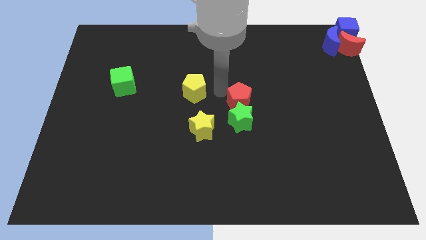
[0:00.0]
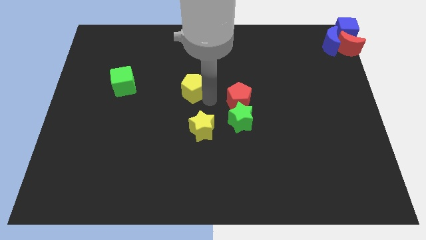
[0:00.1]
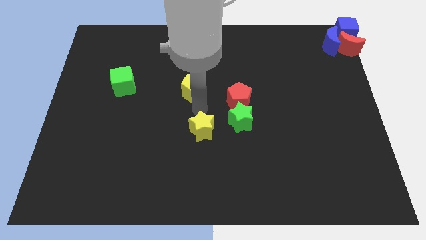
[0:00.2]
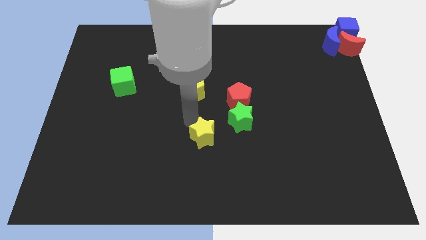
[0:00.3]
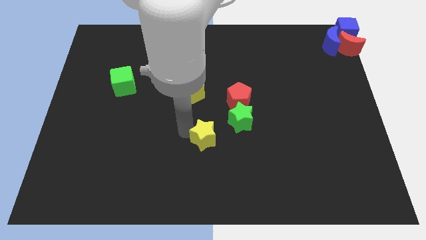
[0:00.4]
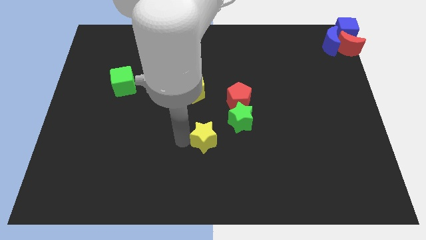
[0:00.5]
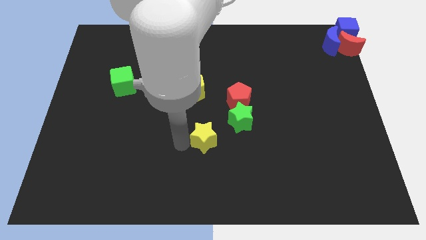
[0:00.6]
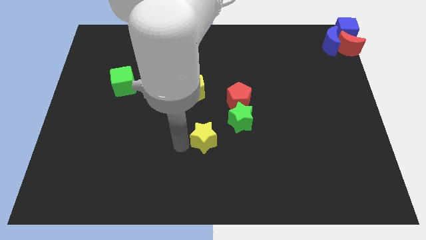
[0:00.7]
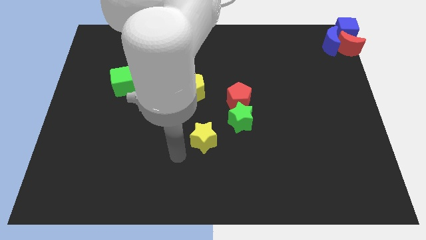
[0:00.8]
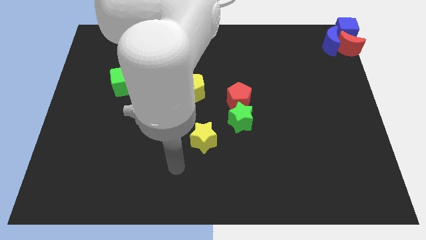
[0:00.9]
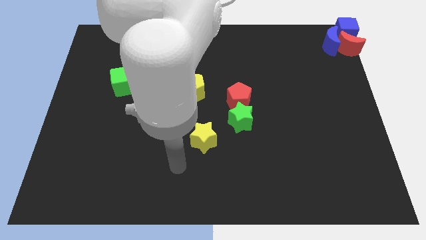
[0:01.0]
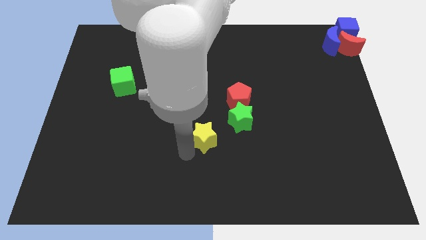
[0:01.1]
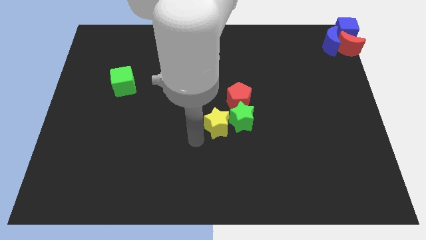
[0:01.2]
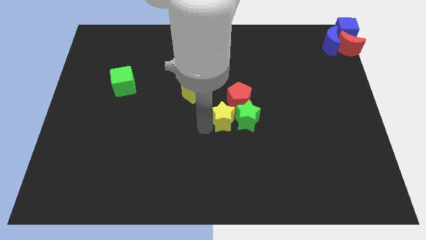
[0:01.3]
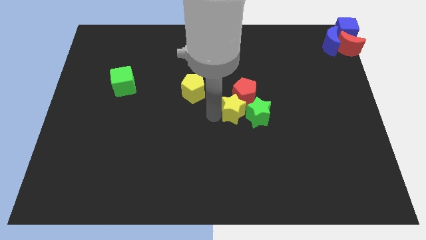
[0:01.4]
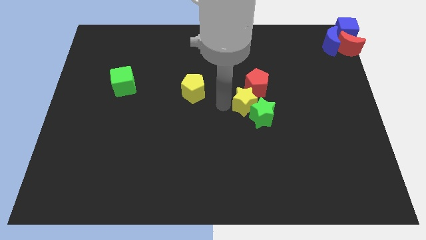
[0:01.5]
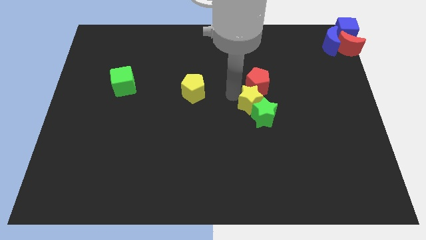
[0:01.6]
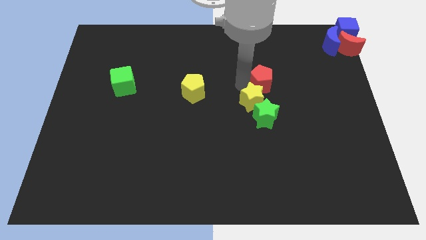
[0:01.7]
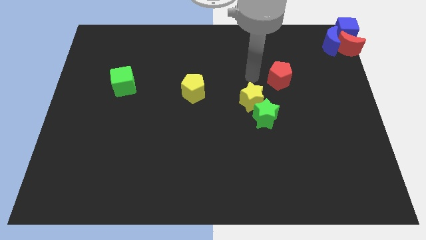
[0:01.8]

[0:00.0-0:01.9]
push the red pentagon and green star using yellow star slightly to the right

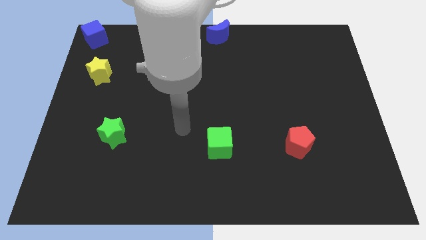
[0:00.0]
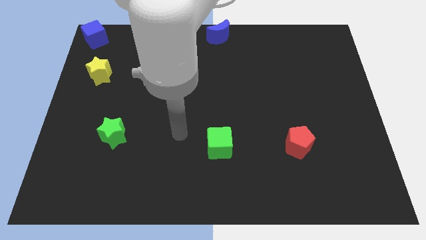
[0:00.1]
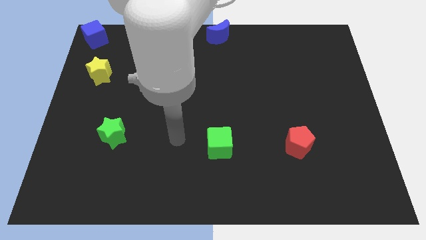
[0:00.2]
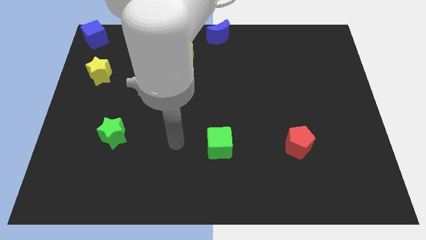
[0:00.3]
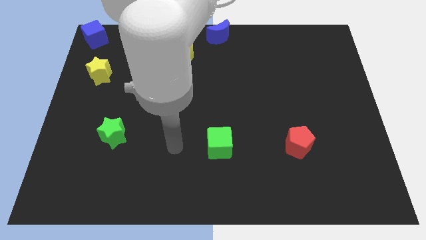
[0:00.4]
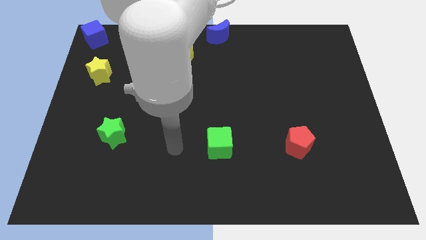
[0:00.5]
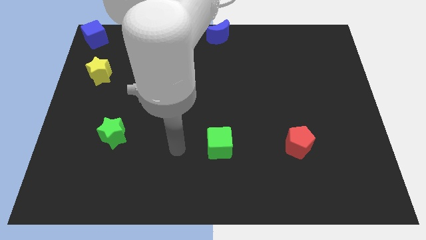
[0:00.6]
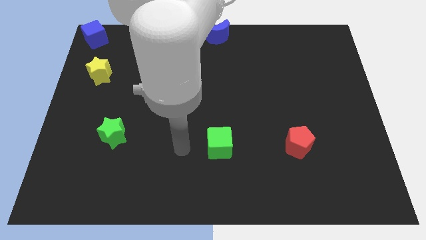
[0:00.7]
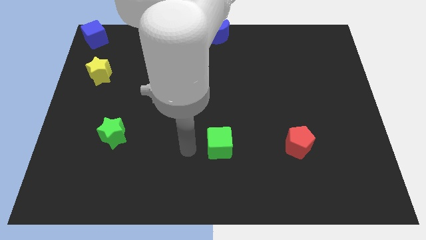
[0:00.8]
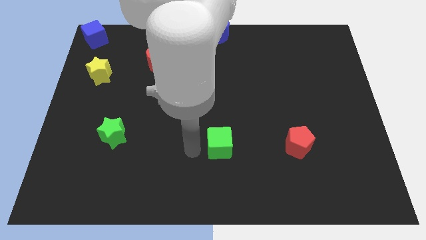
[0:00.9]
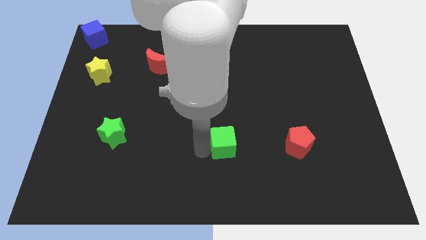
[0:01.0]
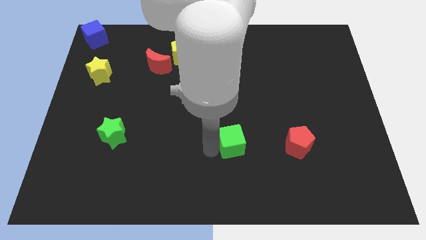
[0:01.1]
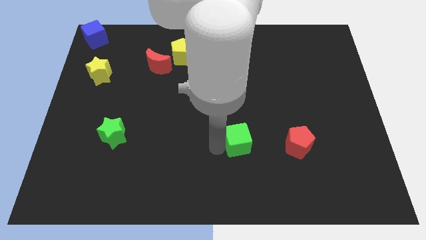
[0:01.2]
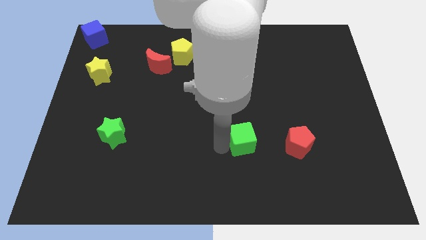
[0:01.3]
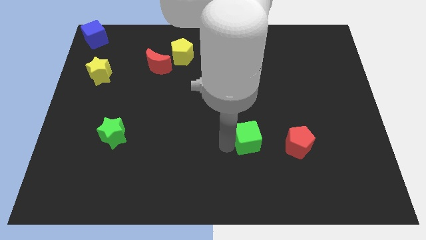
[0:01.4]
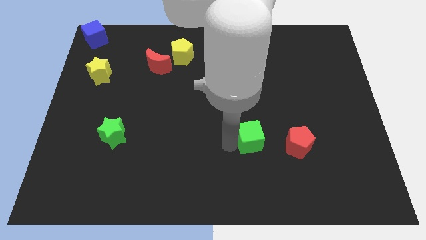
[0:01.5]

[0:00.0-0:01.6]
push the green cube slightly to the right of the board

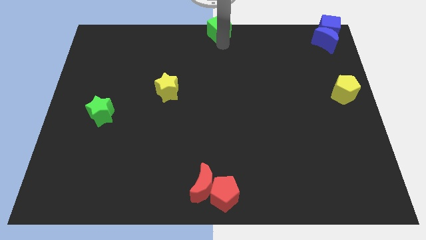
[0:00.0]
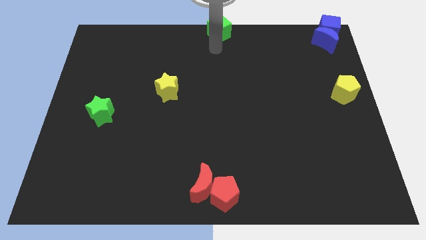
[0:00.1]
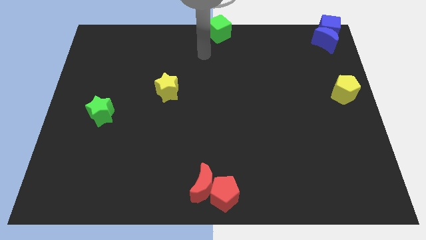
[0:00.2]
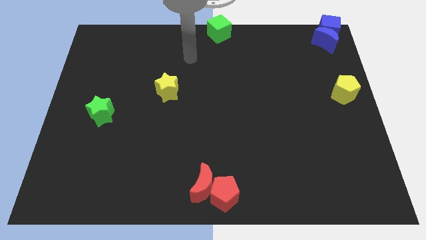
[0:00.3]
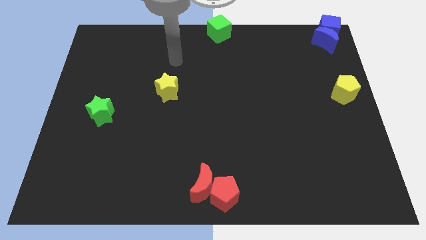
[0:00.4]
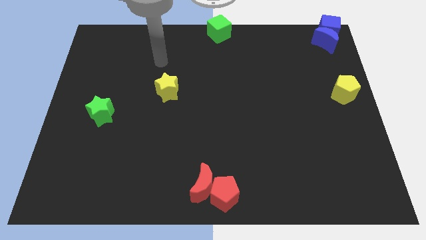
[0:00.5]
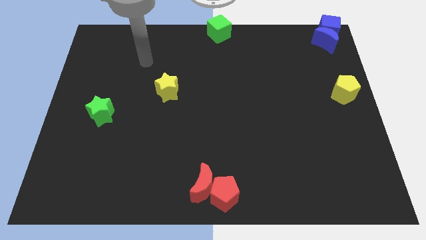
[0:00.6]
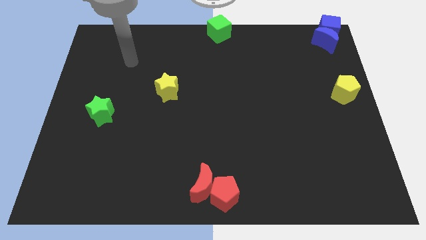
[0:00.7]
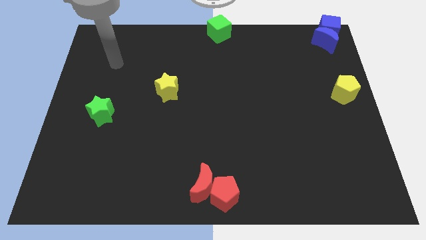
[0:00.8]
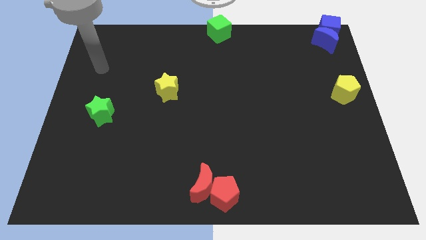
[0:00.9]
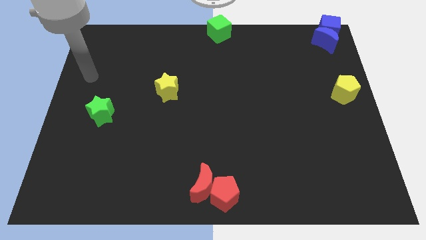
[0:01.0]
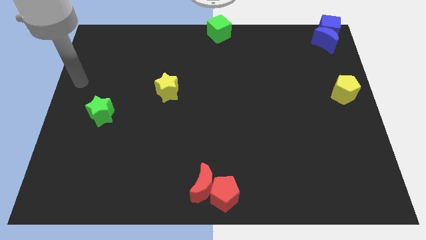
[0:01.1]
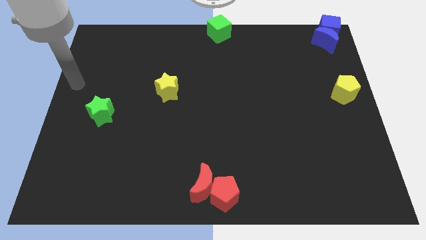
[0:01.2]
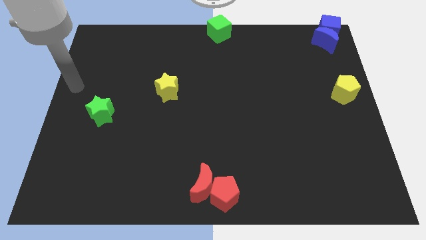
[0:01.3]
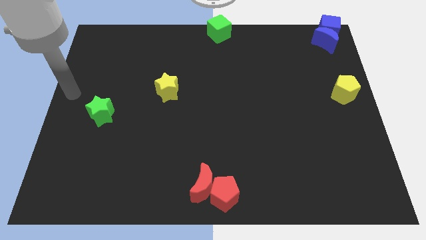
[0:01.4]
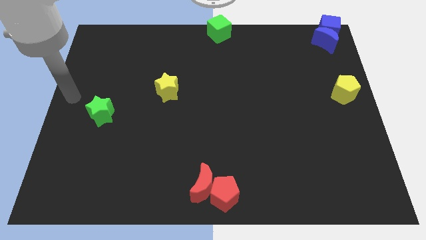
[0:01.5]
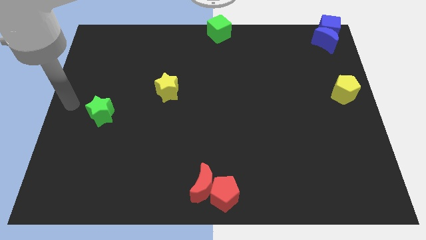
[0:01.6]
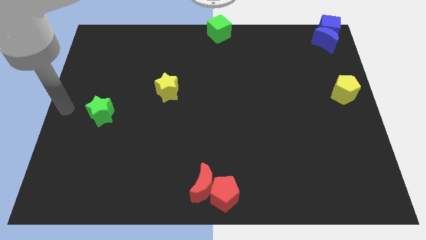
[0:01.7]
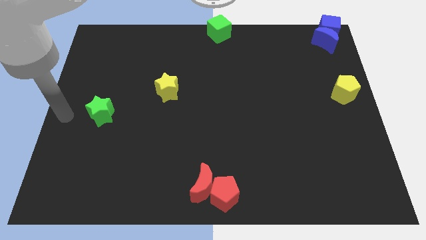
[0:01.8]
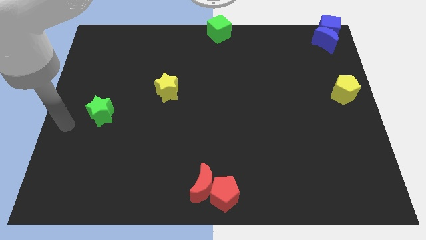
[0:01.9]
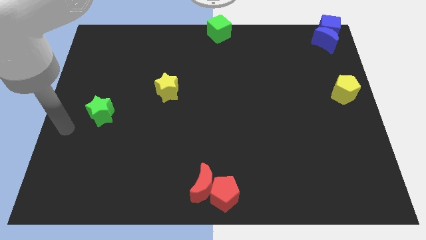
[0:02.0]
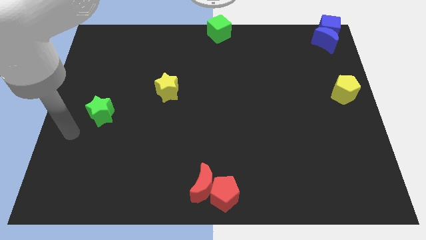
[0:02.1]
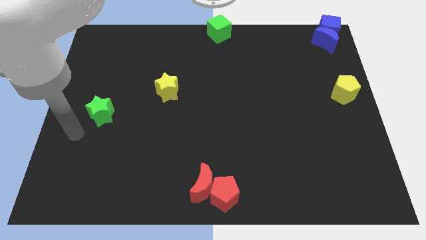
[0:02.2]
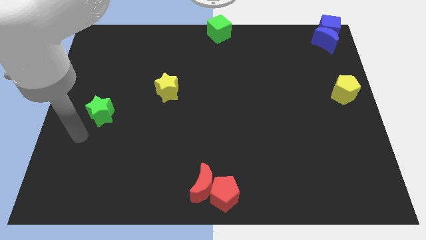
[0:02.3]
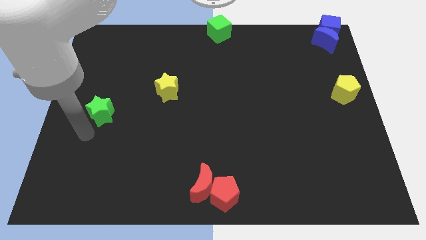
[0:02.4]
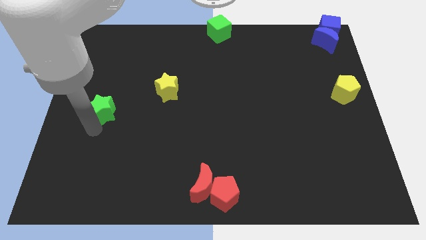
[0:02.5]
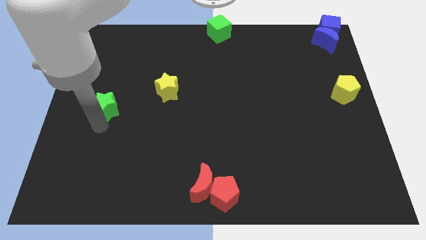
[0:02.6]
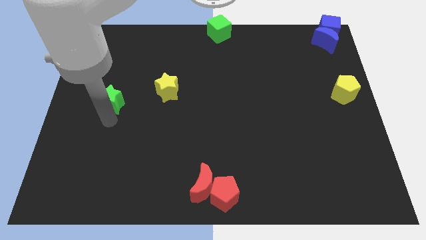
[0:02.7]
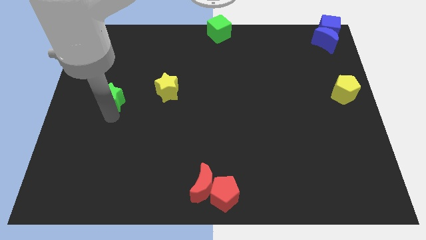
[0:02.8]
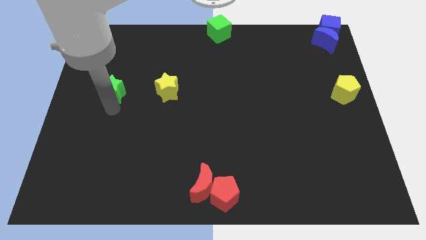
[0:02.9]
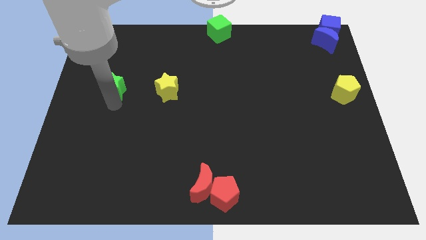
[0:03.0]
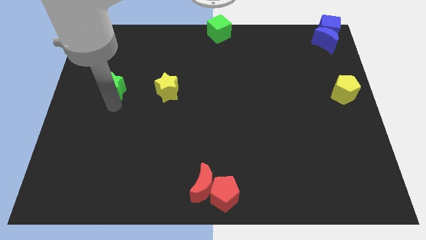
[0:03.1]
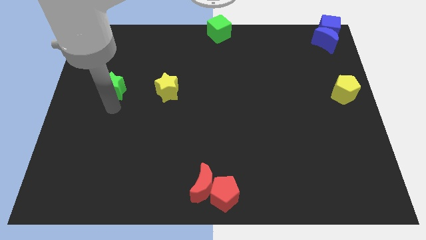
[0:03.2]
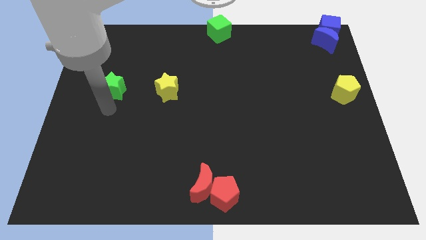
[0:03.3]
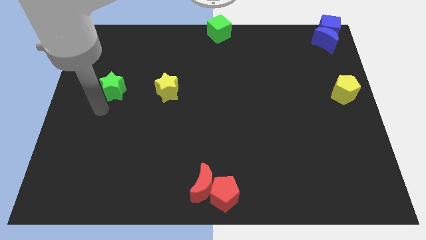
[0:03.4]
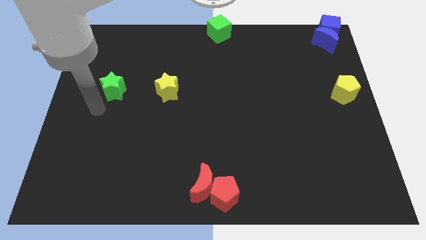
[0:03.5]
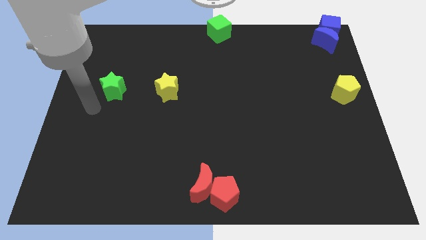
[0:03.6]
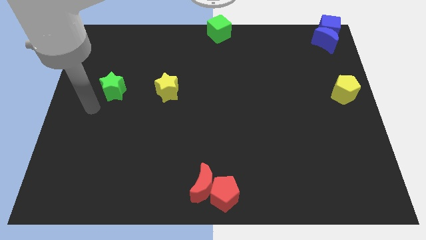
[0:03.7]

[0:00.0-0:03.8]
place the green star to the left side of yellow star

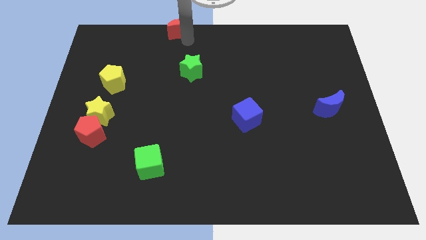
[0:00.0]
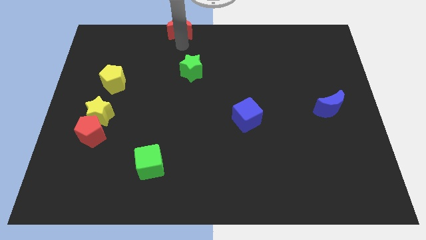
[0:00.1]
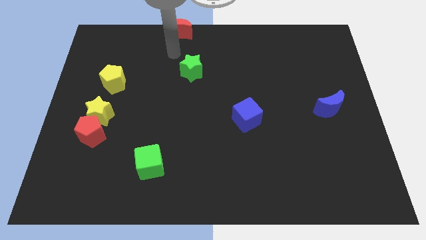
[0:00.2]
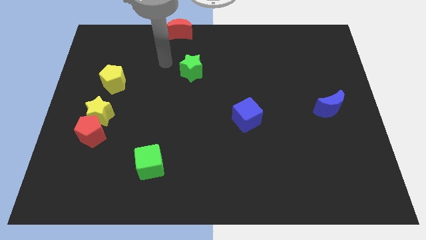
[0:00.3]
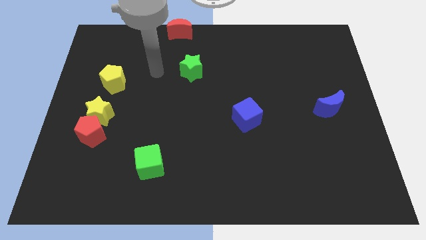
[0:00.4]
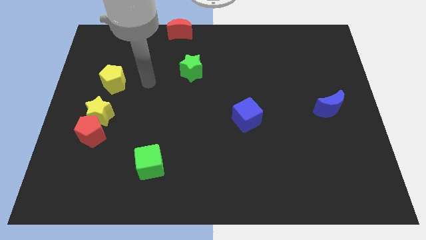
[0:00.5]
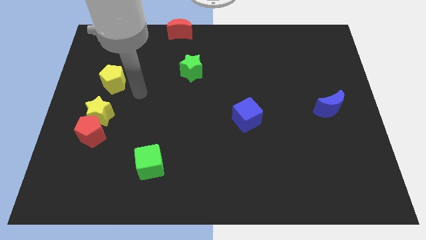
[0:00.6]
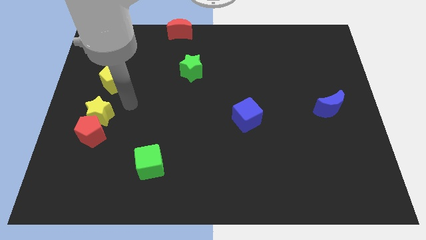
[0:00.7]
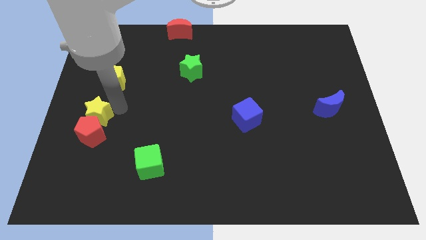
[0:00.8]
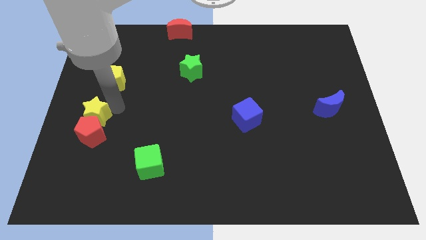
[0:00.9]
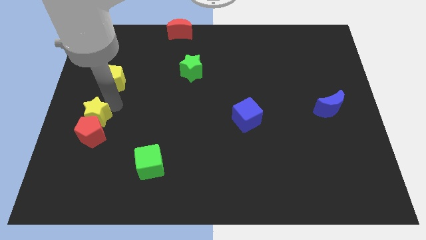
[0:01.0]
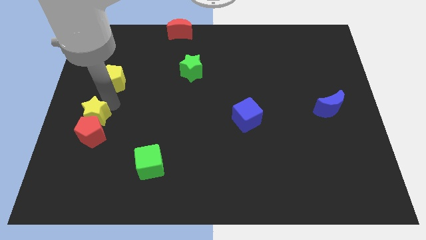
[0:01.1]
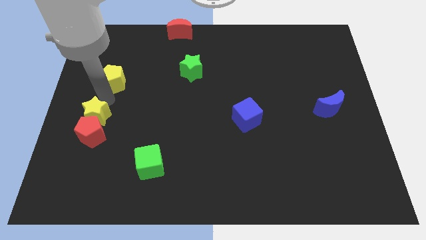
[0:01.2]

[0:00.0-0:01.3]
move your arm away from the red moon

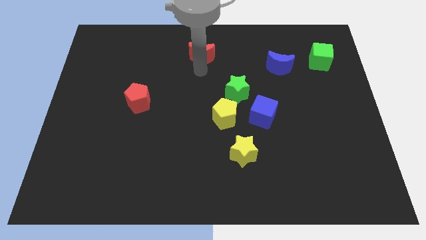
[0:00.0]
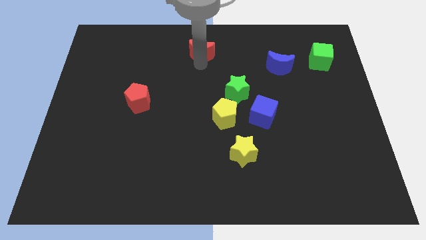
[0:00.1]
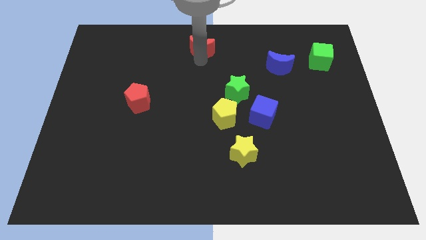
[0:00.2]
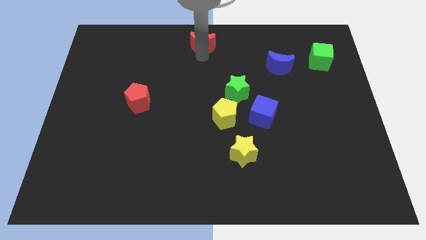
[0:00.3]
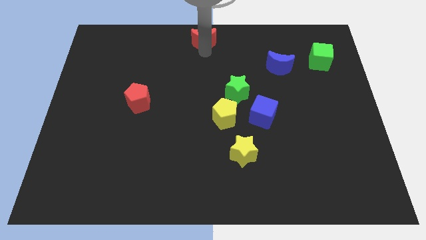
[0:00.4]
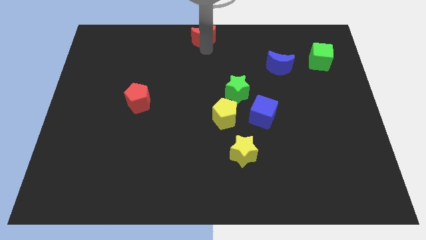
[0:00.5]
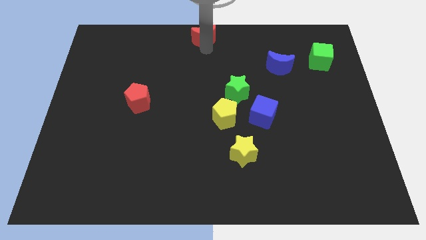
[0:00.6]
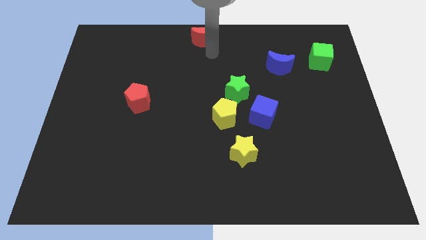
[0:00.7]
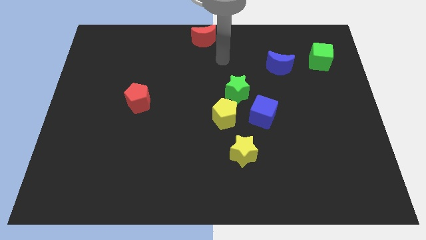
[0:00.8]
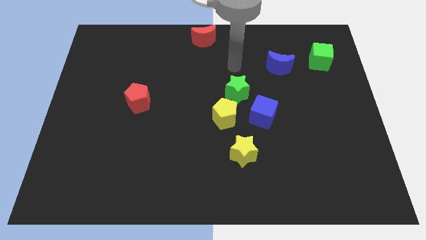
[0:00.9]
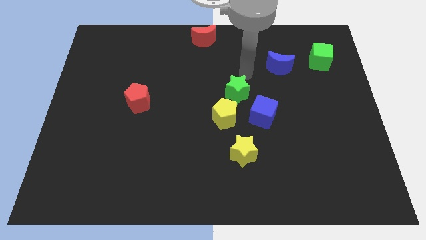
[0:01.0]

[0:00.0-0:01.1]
push the red moon to the top center of the board
